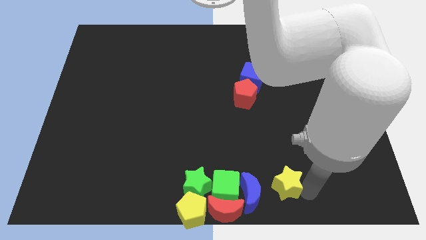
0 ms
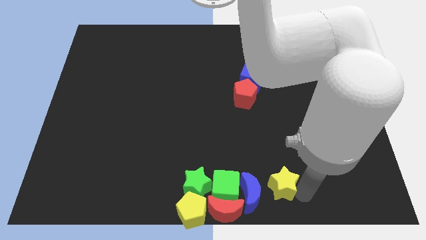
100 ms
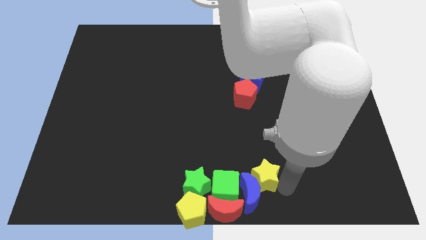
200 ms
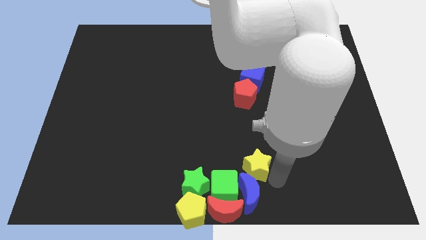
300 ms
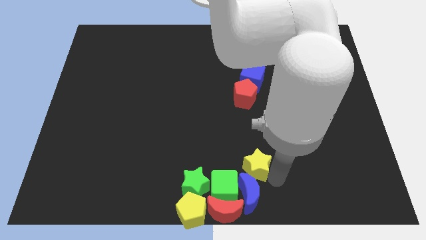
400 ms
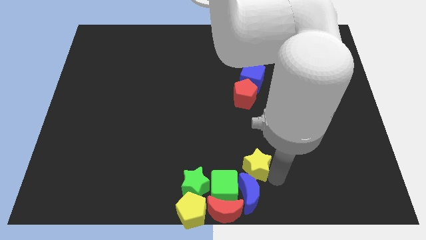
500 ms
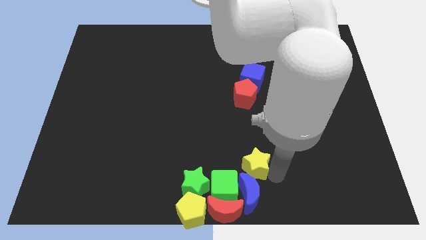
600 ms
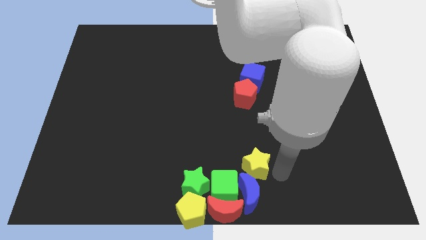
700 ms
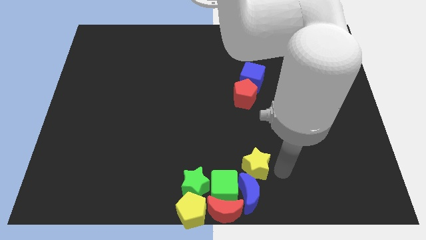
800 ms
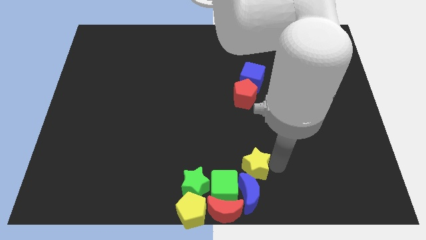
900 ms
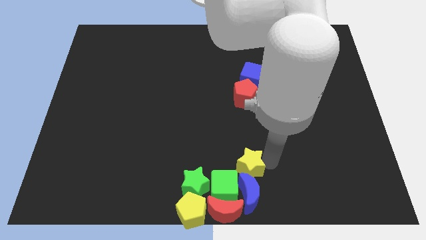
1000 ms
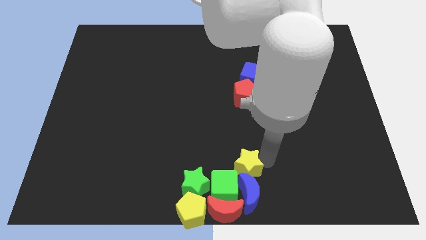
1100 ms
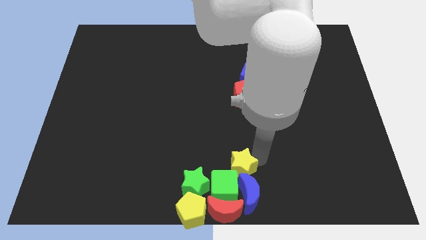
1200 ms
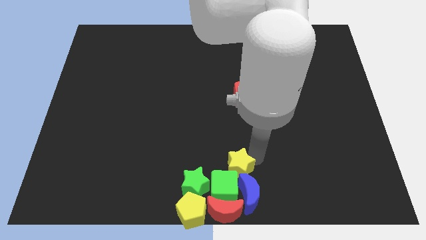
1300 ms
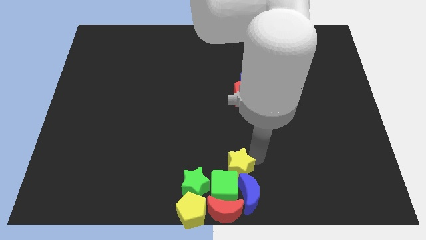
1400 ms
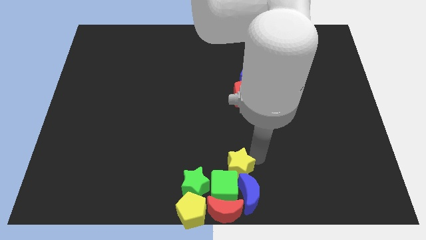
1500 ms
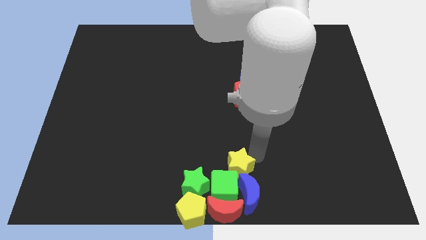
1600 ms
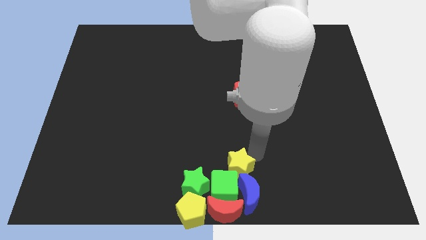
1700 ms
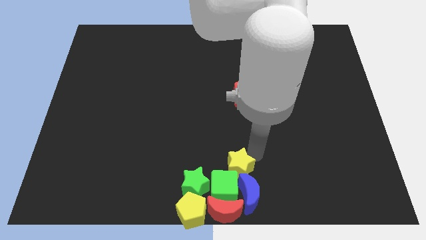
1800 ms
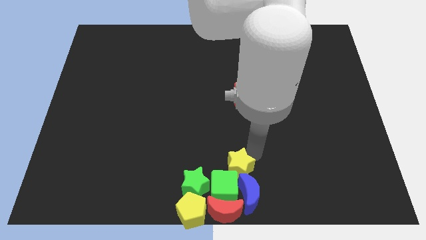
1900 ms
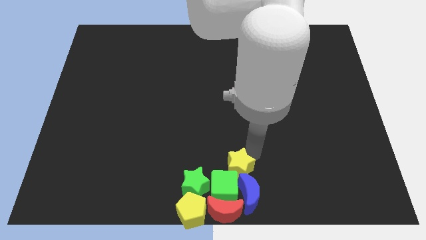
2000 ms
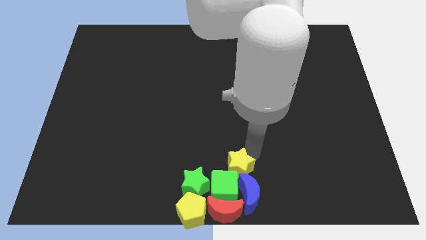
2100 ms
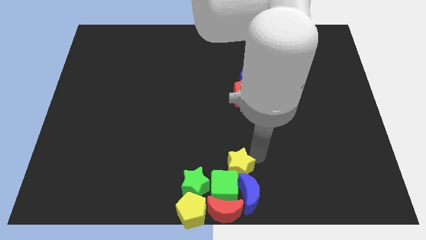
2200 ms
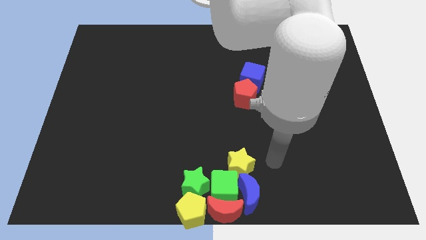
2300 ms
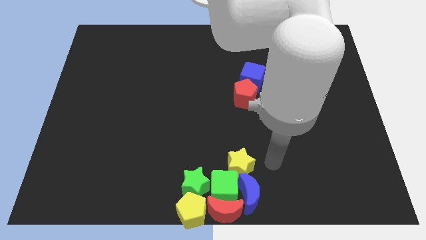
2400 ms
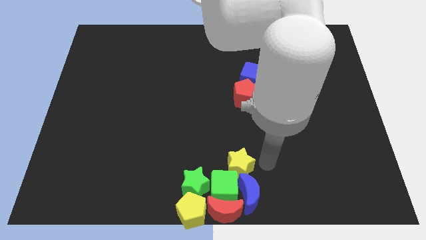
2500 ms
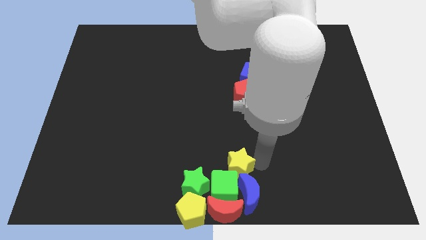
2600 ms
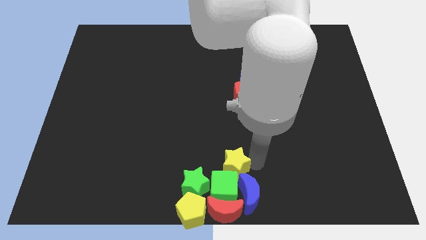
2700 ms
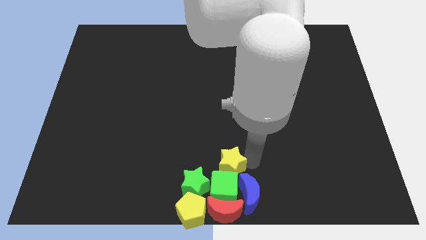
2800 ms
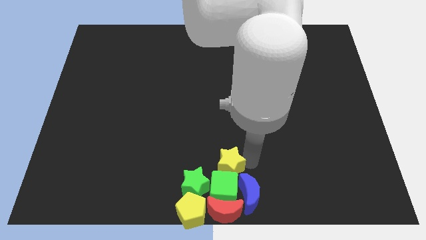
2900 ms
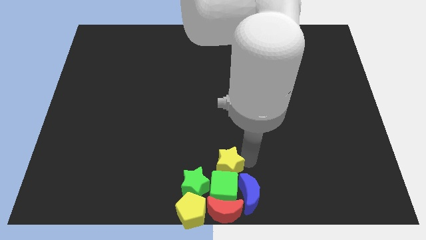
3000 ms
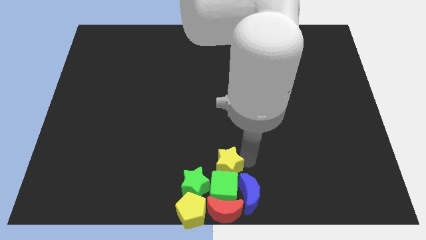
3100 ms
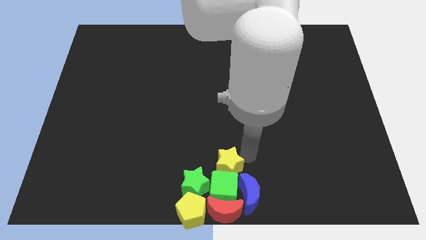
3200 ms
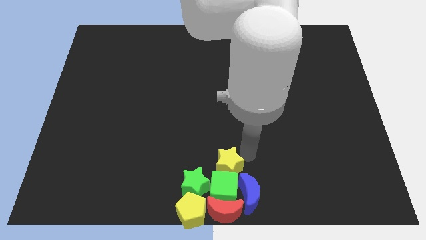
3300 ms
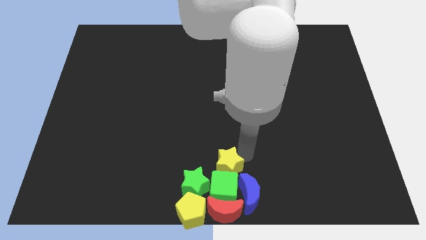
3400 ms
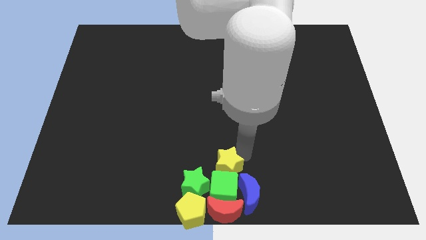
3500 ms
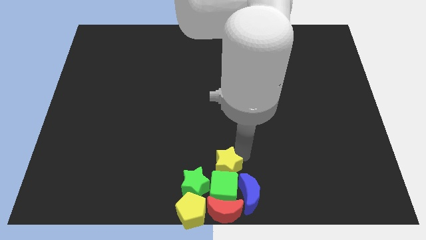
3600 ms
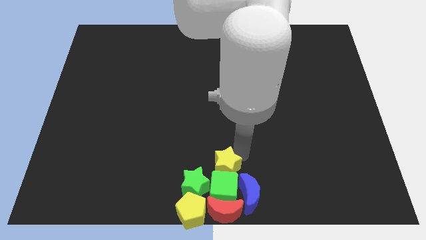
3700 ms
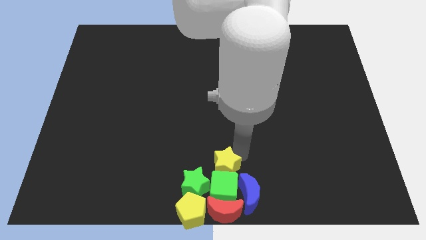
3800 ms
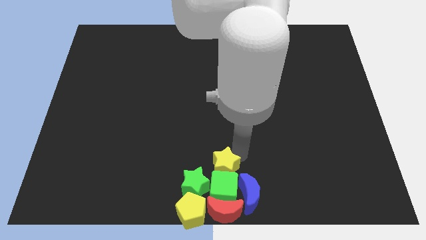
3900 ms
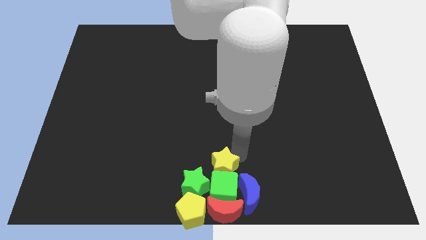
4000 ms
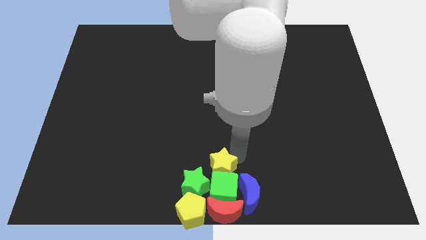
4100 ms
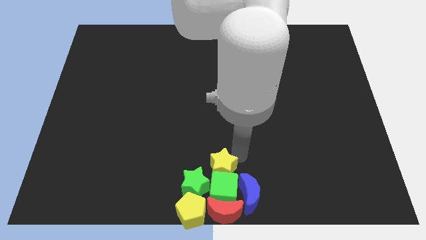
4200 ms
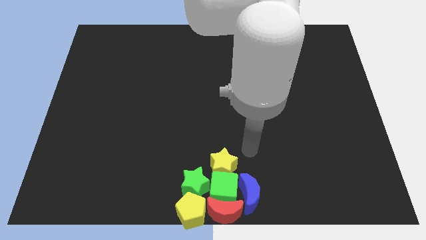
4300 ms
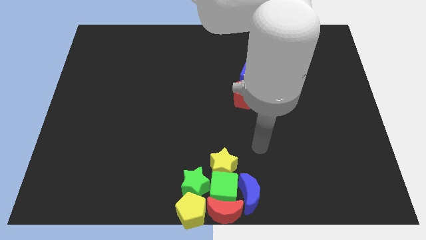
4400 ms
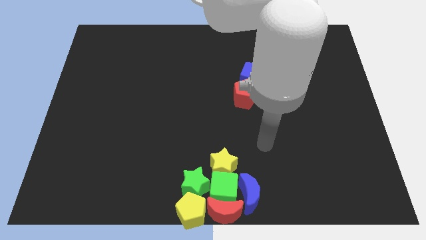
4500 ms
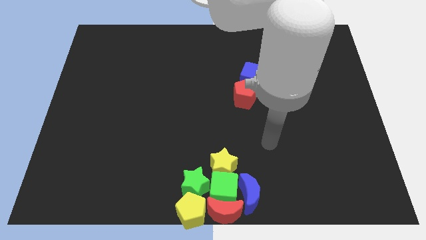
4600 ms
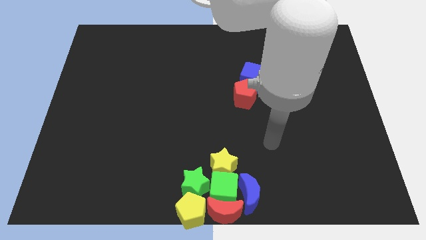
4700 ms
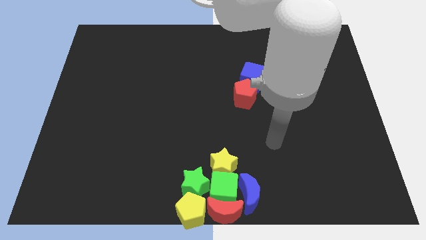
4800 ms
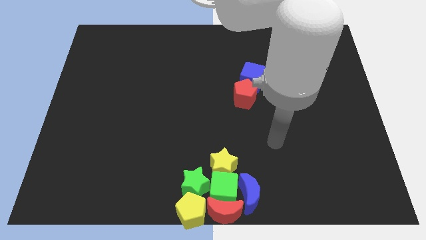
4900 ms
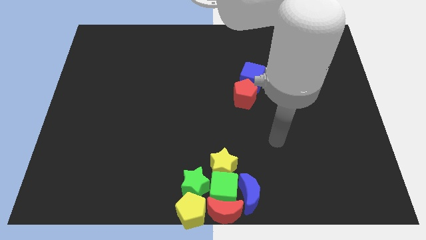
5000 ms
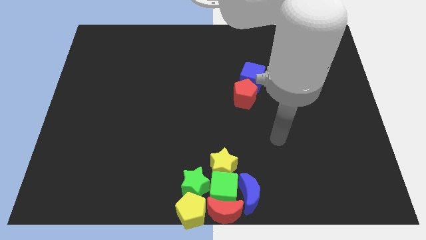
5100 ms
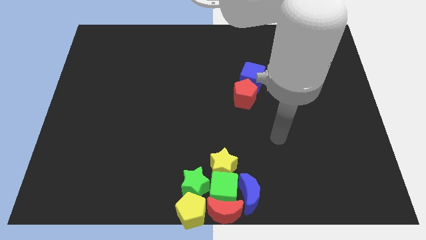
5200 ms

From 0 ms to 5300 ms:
place the yellow star above the green cube

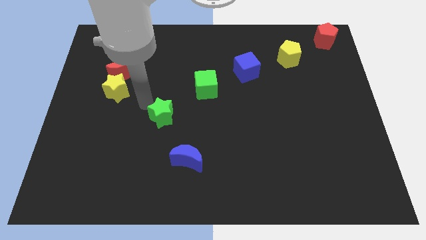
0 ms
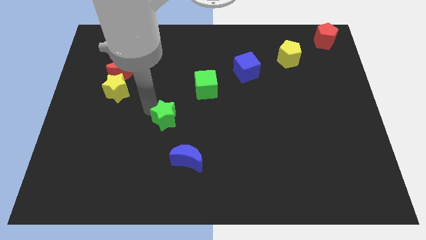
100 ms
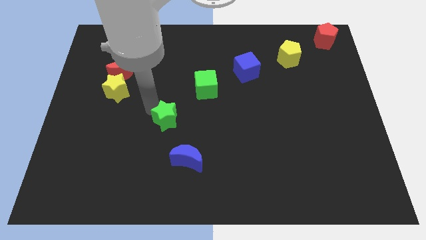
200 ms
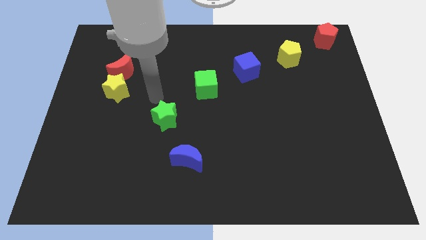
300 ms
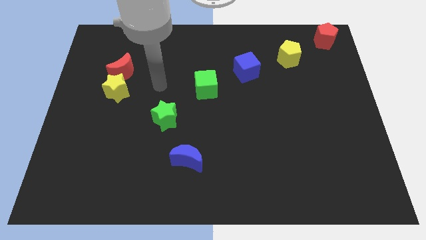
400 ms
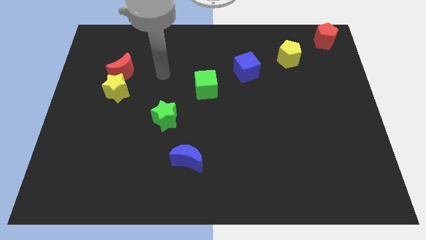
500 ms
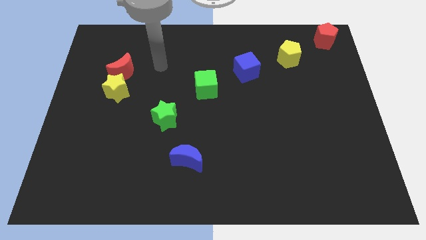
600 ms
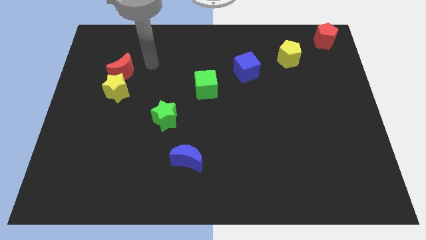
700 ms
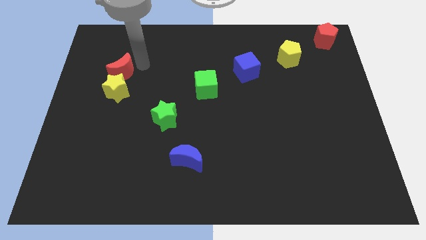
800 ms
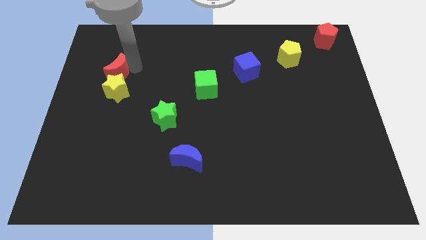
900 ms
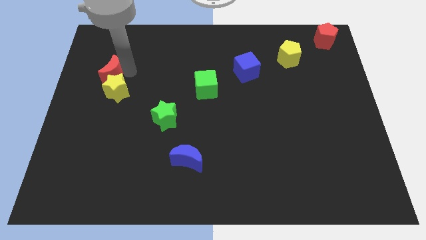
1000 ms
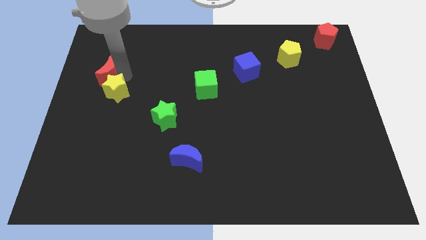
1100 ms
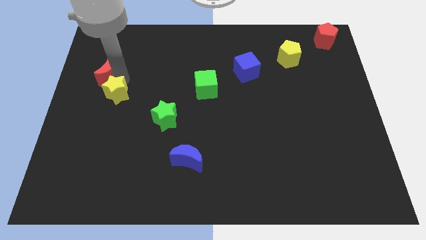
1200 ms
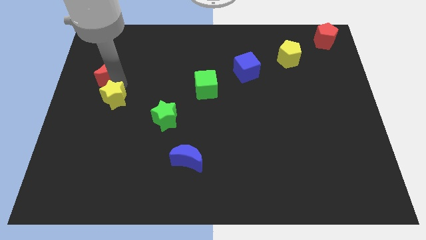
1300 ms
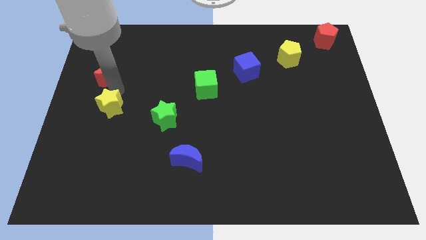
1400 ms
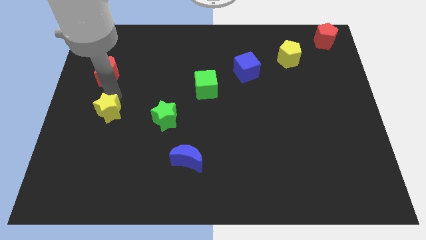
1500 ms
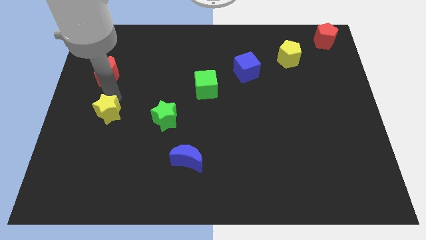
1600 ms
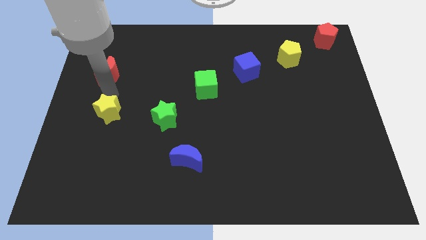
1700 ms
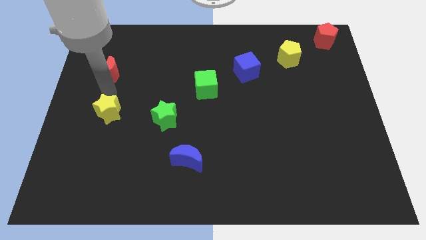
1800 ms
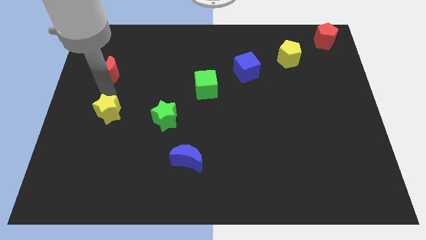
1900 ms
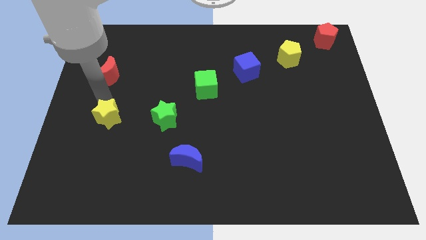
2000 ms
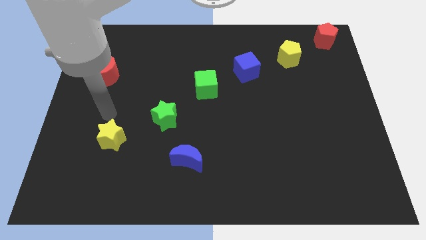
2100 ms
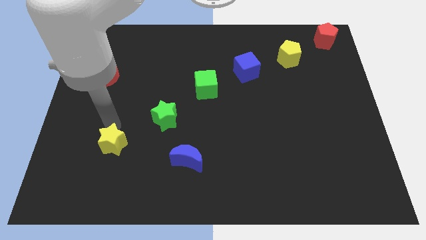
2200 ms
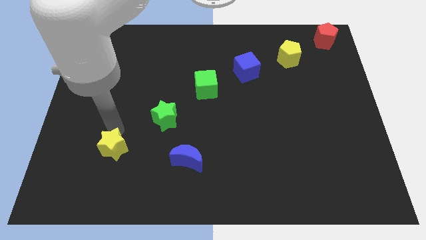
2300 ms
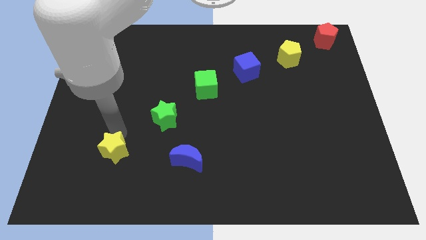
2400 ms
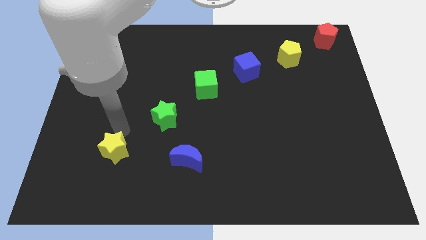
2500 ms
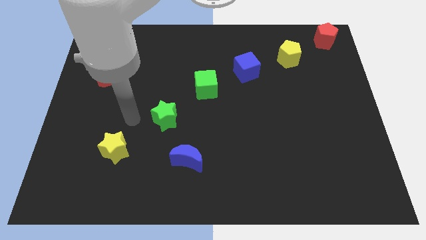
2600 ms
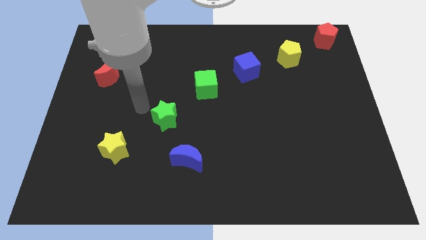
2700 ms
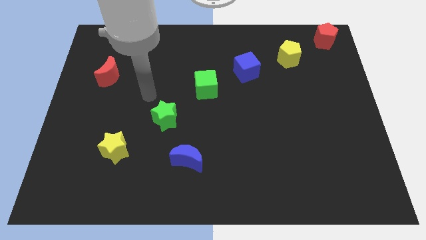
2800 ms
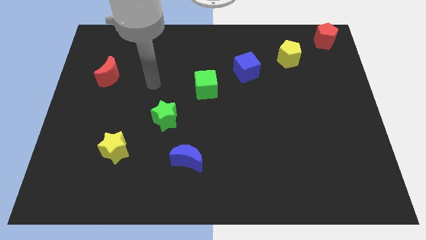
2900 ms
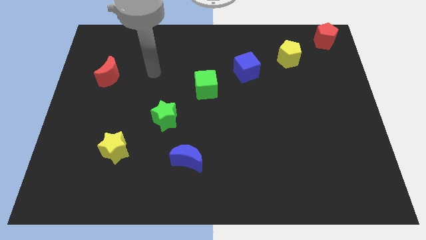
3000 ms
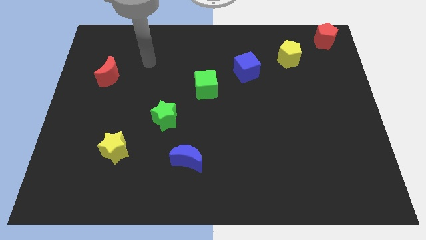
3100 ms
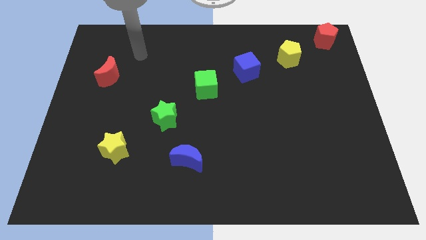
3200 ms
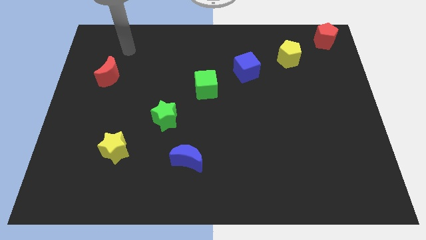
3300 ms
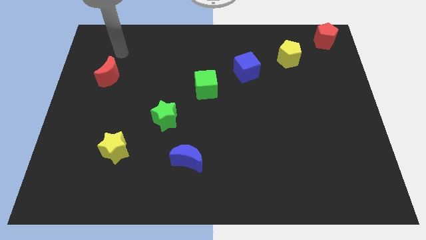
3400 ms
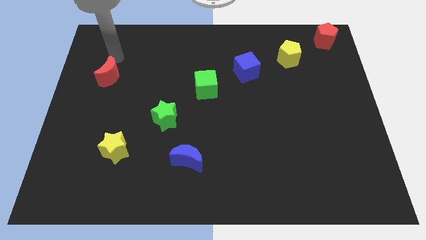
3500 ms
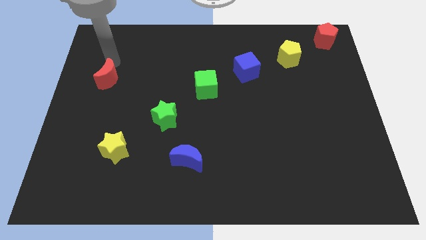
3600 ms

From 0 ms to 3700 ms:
separate the yellow star from the red crescent

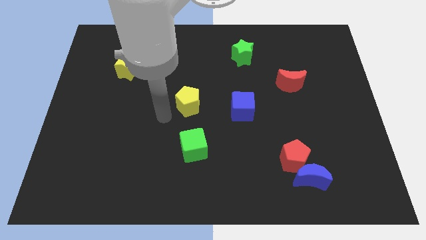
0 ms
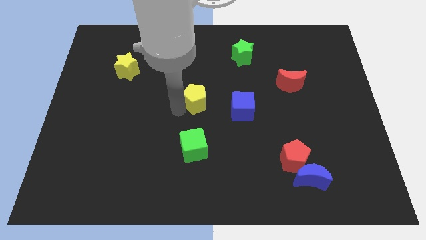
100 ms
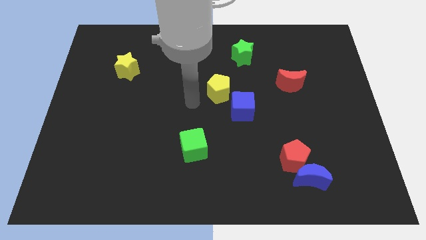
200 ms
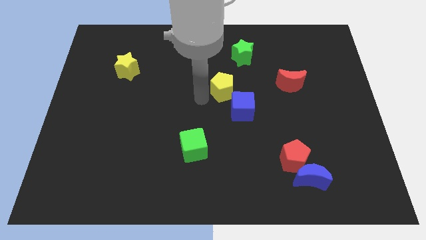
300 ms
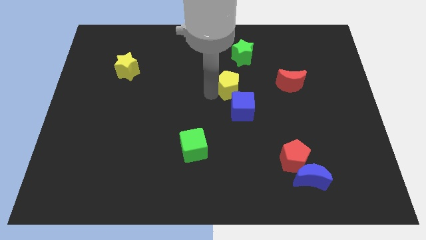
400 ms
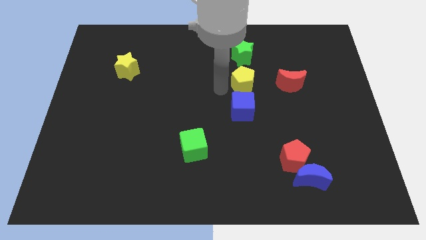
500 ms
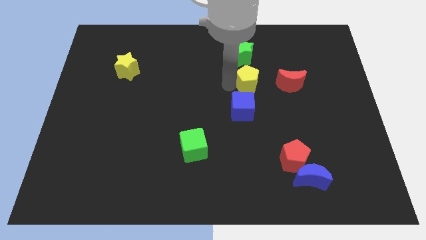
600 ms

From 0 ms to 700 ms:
place the yellow pentagon in between the green star and blue cube
